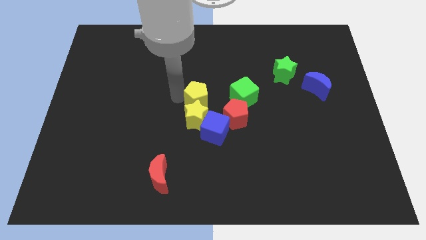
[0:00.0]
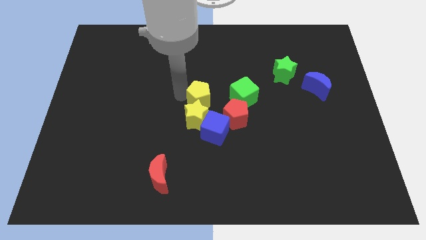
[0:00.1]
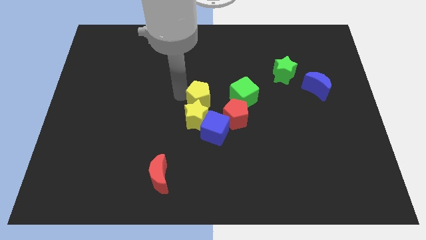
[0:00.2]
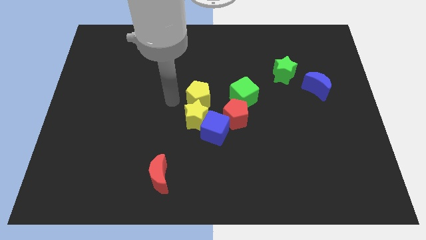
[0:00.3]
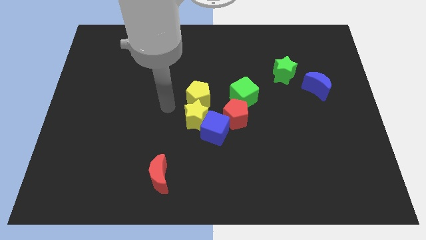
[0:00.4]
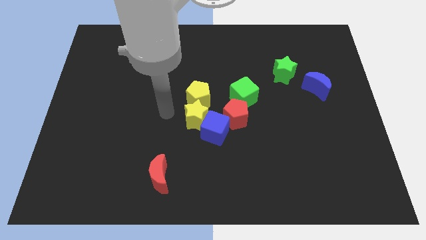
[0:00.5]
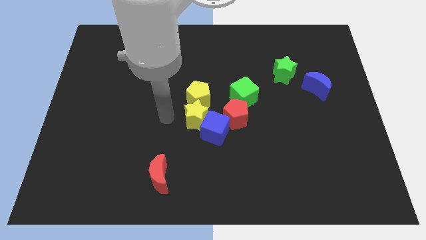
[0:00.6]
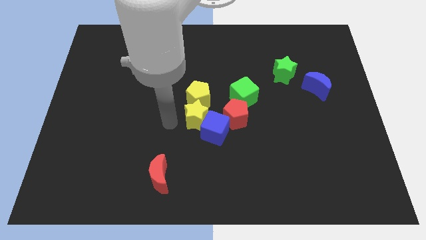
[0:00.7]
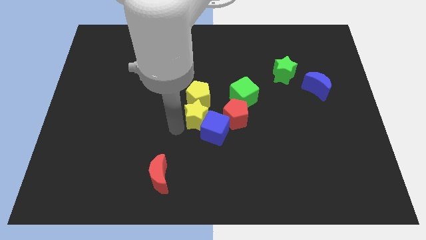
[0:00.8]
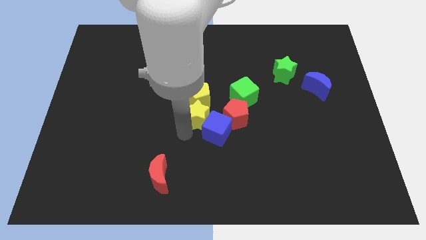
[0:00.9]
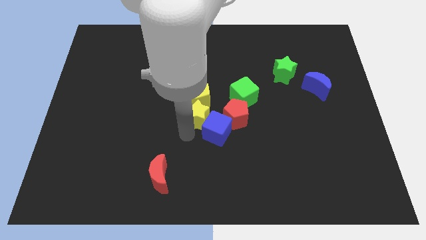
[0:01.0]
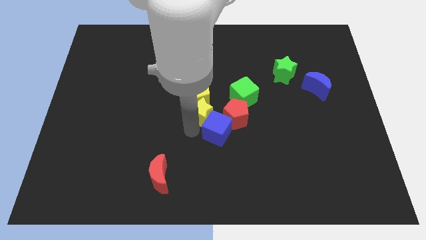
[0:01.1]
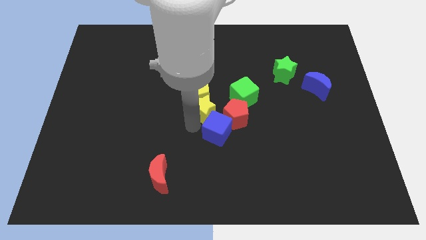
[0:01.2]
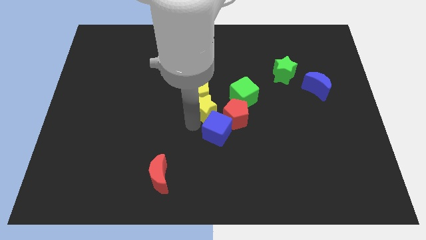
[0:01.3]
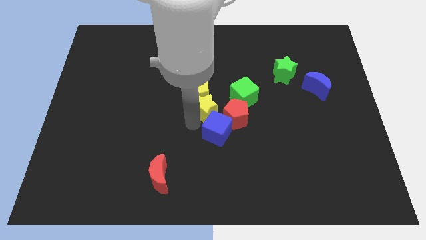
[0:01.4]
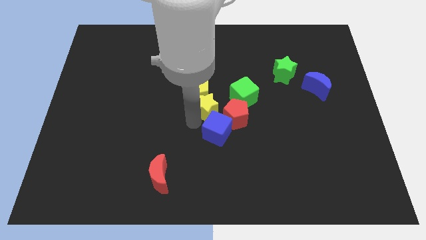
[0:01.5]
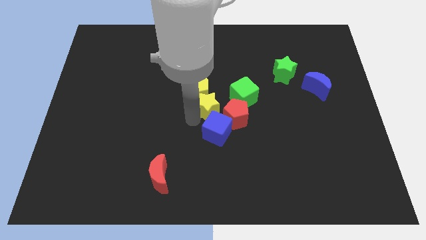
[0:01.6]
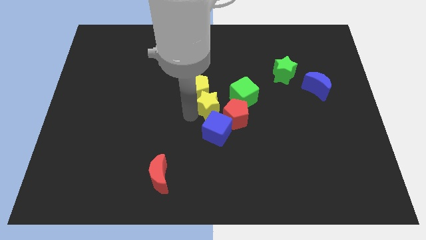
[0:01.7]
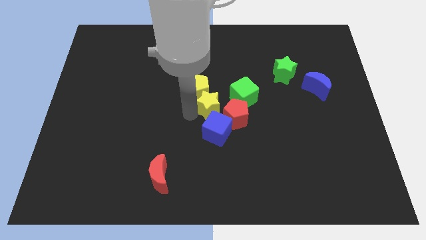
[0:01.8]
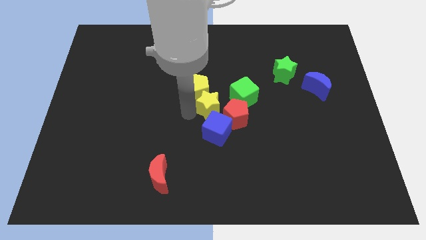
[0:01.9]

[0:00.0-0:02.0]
push a group of blocks to the center of the board

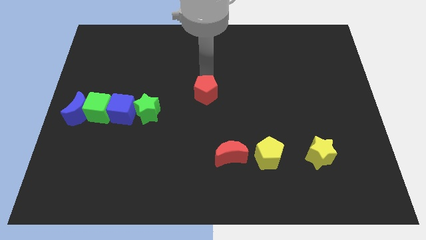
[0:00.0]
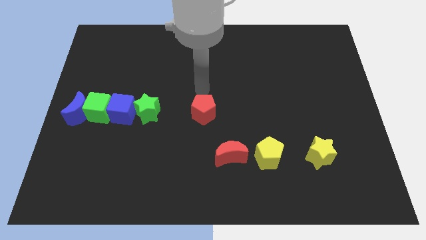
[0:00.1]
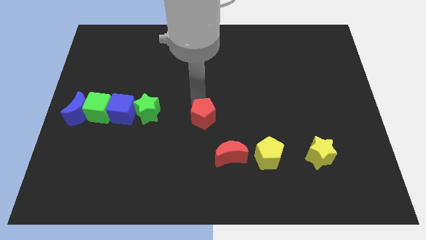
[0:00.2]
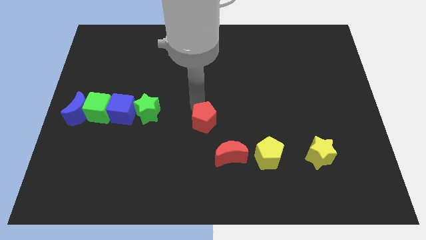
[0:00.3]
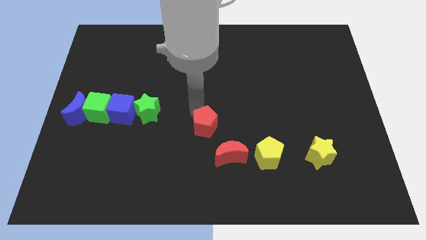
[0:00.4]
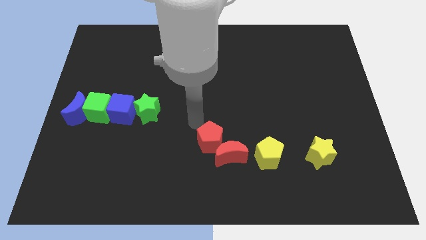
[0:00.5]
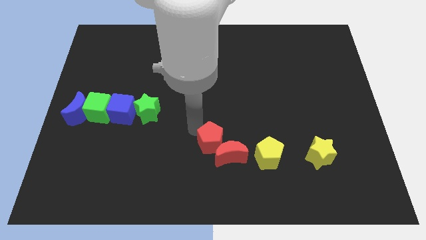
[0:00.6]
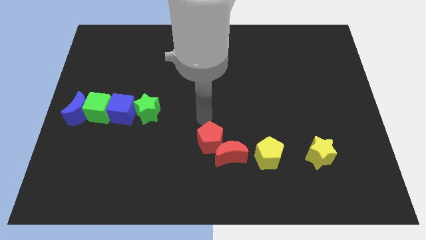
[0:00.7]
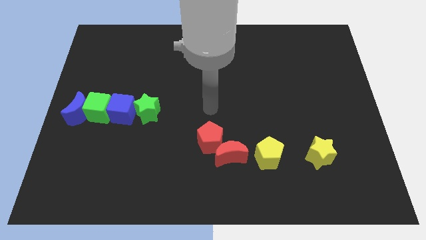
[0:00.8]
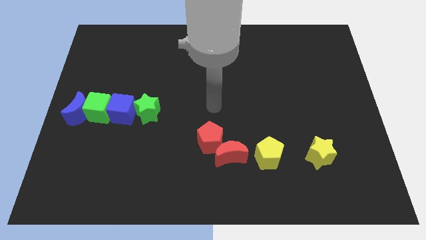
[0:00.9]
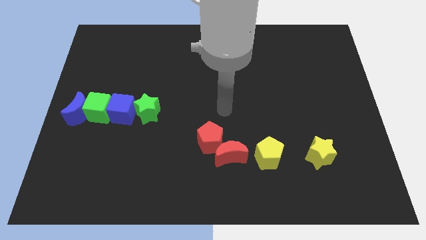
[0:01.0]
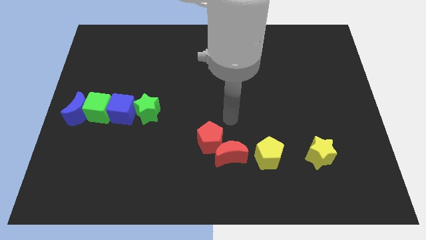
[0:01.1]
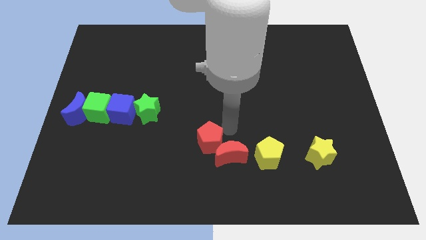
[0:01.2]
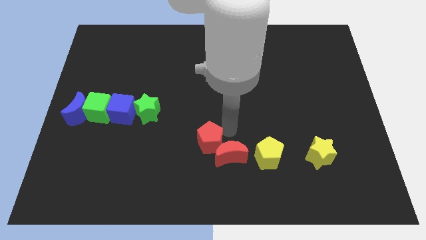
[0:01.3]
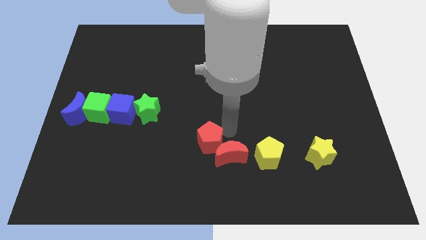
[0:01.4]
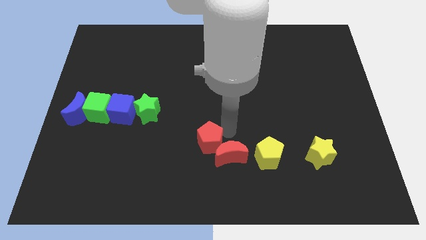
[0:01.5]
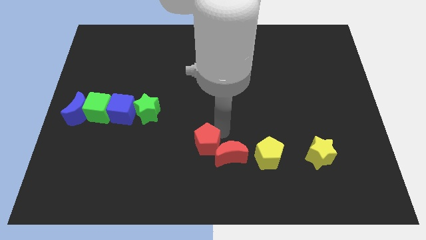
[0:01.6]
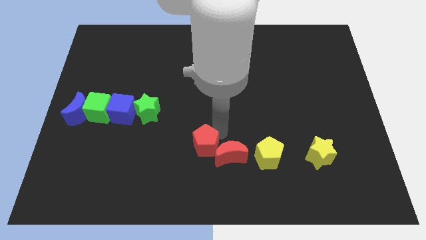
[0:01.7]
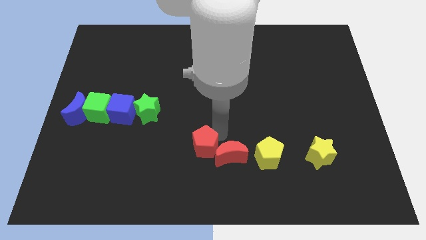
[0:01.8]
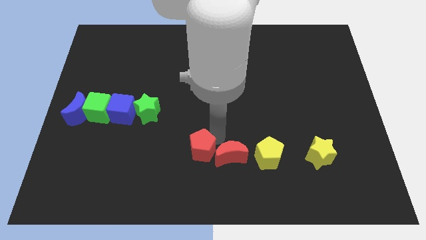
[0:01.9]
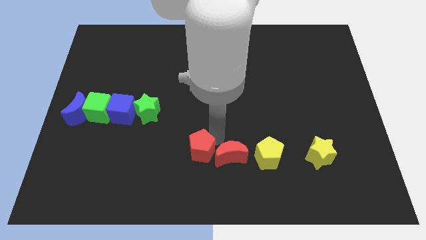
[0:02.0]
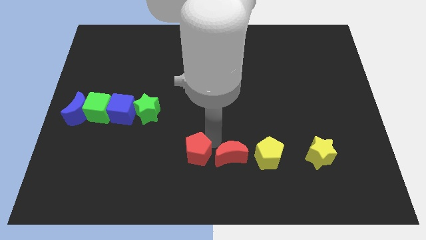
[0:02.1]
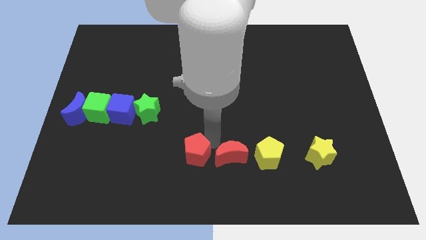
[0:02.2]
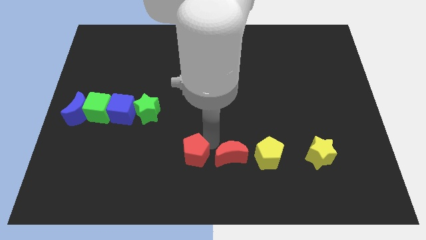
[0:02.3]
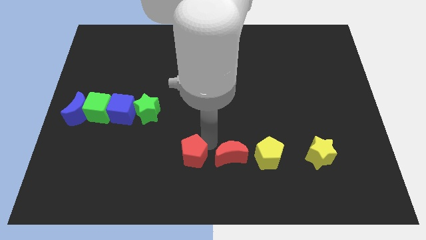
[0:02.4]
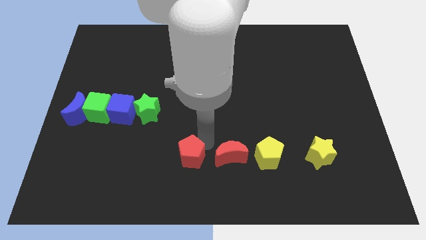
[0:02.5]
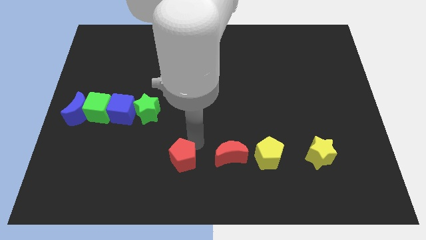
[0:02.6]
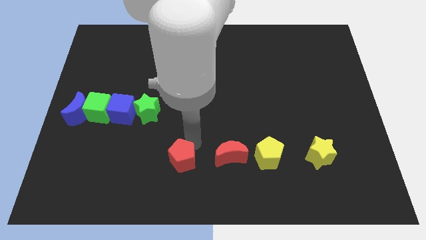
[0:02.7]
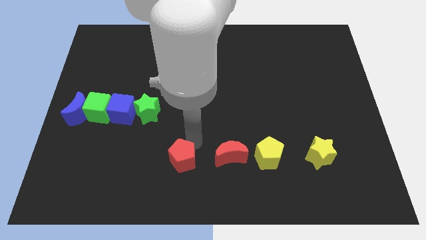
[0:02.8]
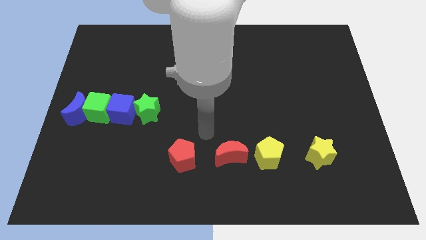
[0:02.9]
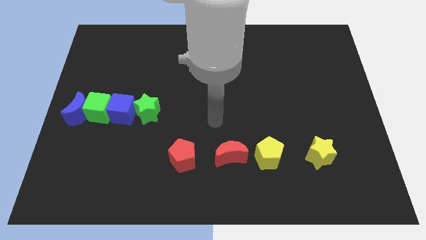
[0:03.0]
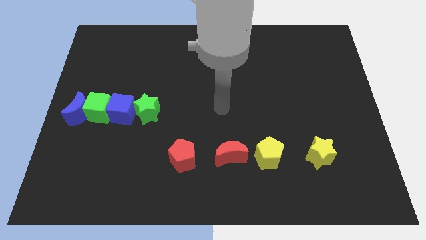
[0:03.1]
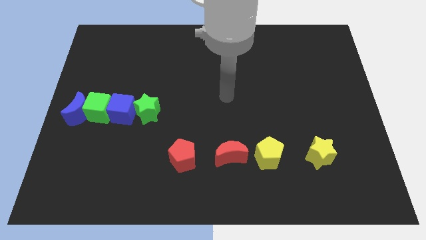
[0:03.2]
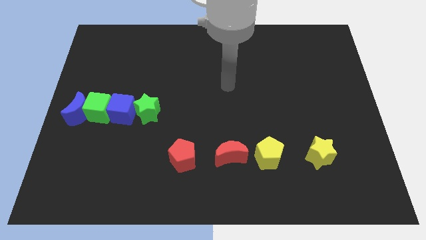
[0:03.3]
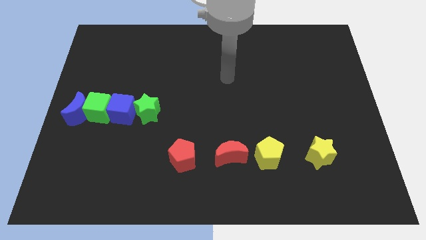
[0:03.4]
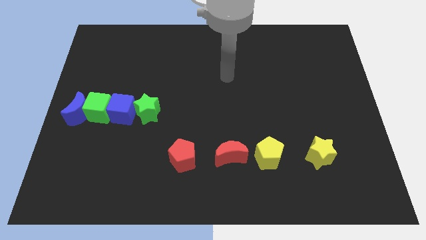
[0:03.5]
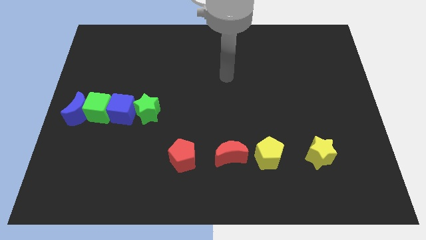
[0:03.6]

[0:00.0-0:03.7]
place red pentagon in horizontal line of blocks

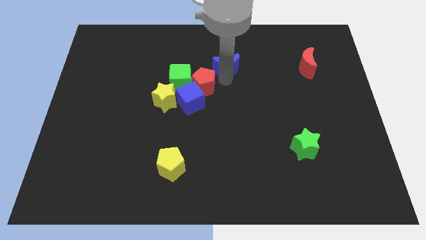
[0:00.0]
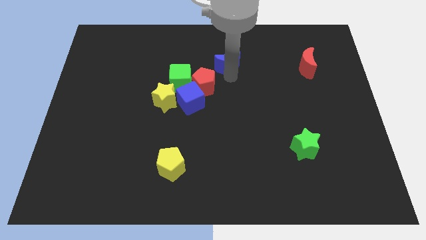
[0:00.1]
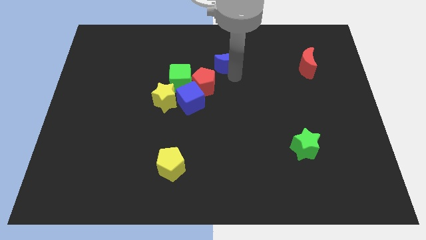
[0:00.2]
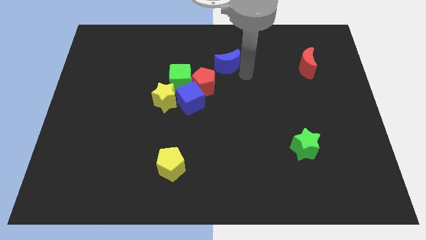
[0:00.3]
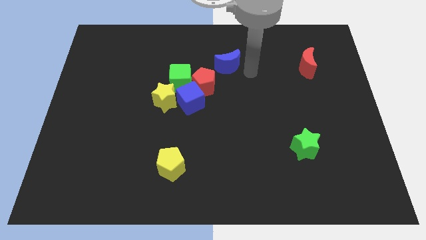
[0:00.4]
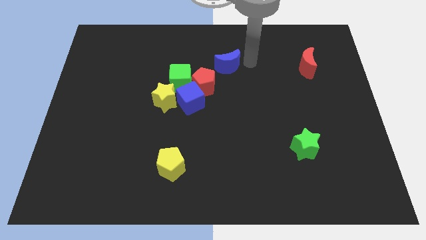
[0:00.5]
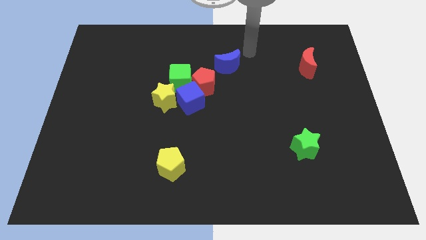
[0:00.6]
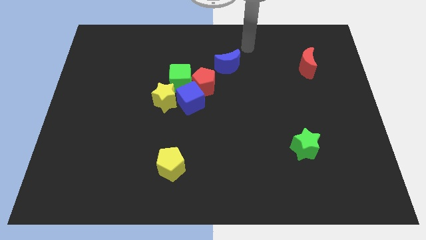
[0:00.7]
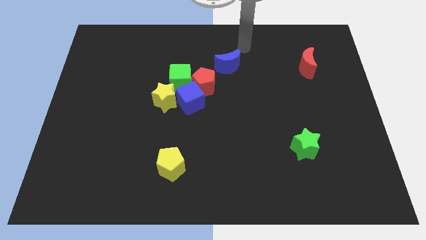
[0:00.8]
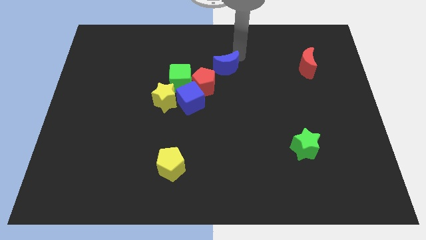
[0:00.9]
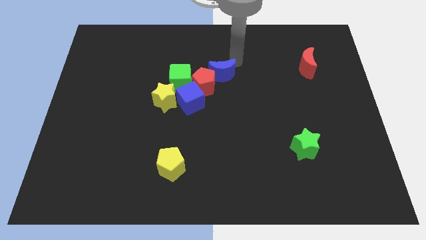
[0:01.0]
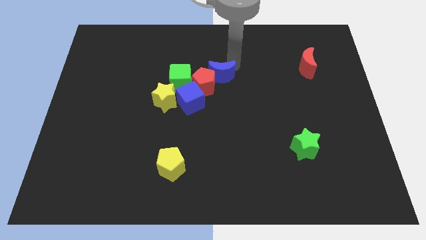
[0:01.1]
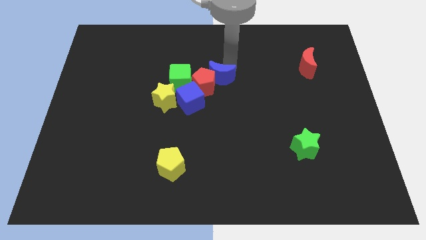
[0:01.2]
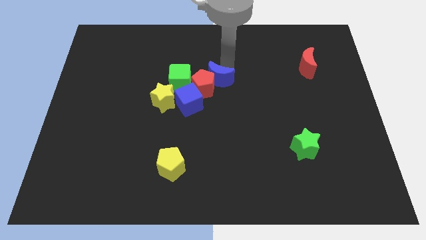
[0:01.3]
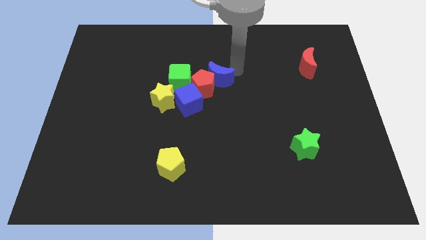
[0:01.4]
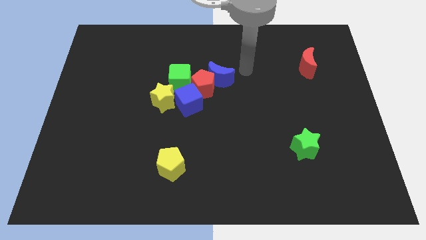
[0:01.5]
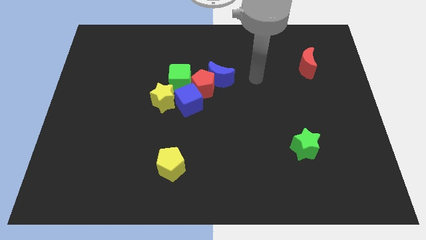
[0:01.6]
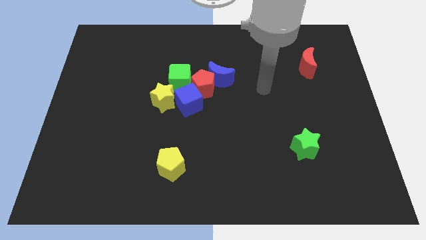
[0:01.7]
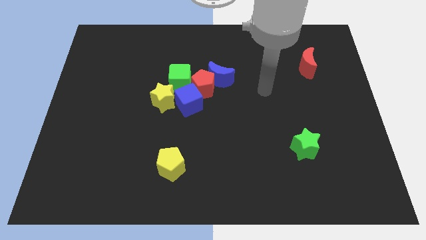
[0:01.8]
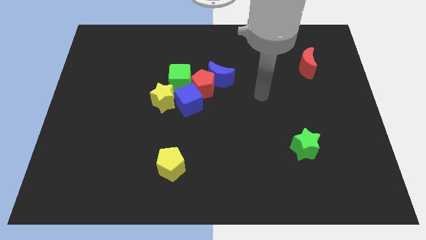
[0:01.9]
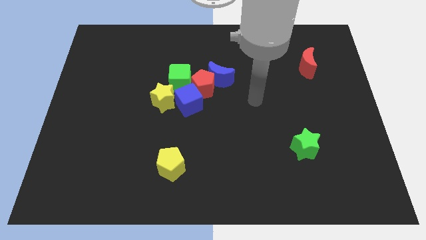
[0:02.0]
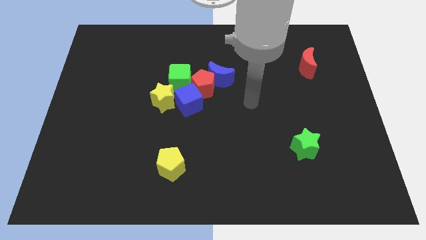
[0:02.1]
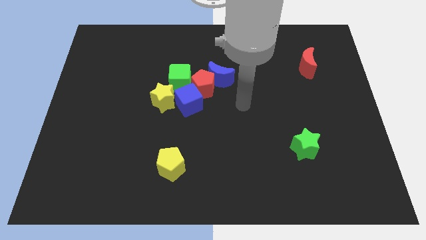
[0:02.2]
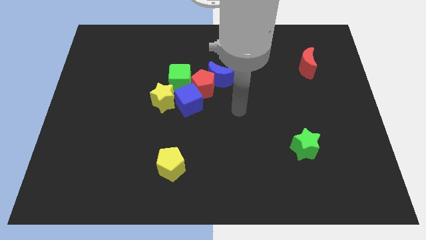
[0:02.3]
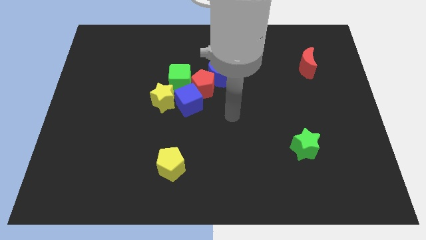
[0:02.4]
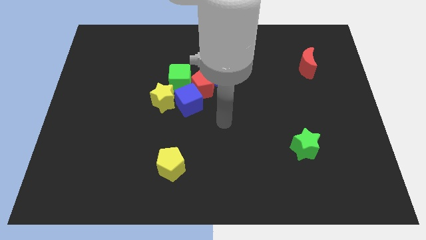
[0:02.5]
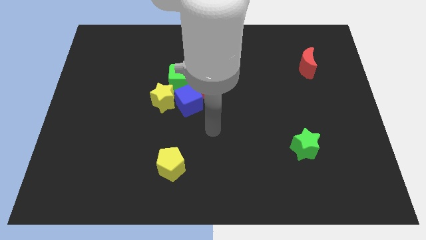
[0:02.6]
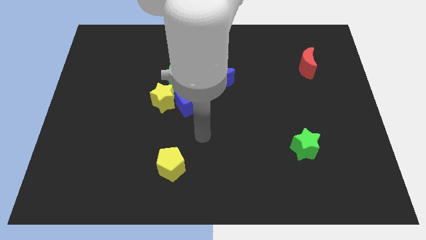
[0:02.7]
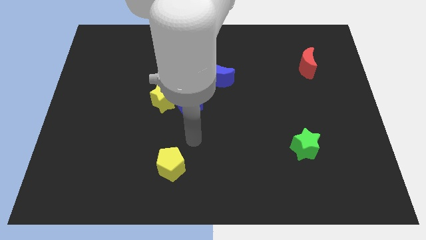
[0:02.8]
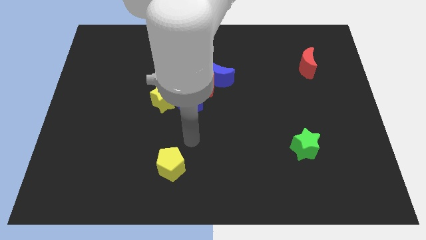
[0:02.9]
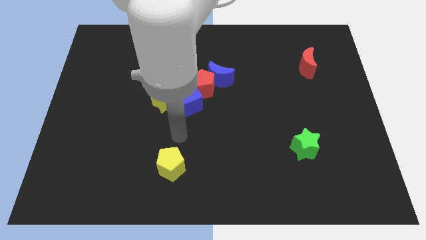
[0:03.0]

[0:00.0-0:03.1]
move blue crescent into red pentagon
